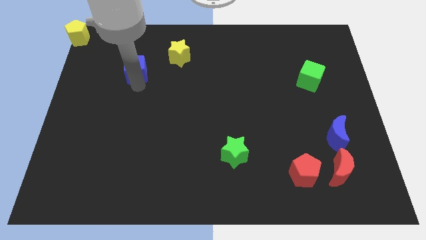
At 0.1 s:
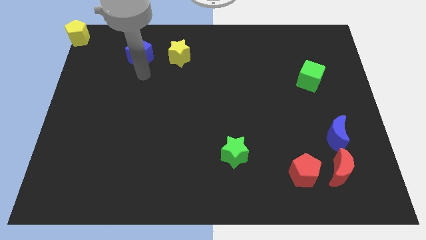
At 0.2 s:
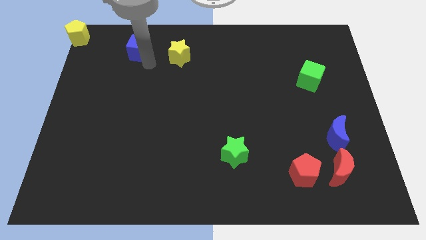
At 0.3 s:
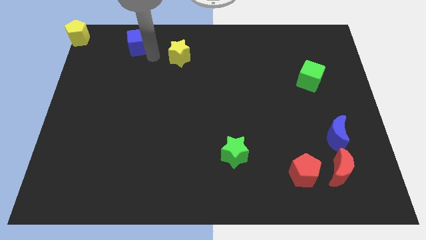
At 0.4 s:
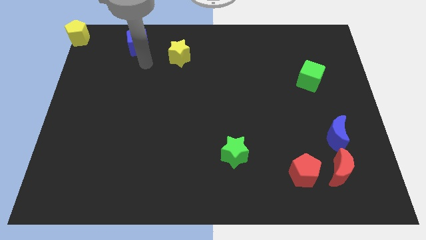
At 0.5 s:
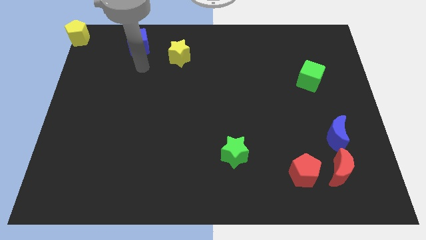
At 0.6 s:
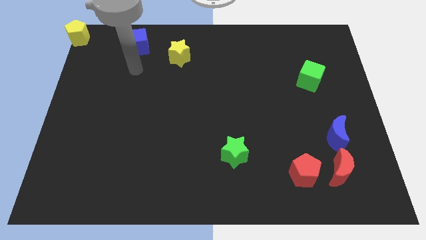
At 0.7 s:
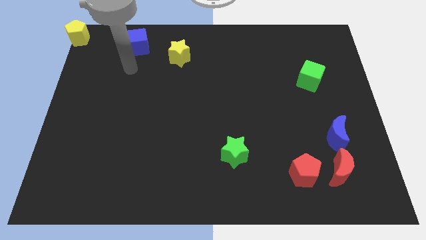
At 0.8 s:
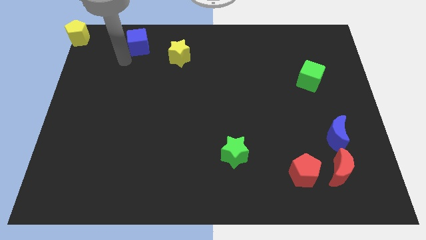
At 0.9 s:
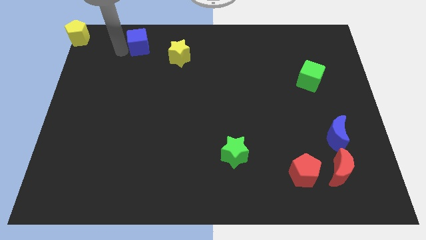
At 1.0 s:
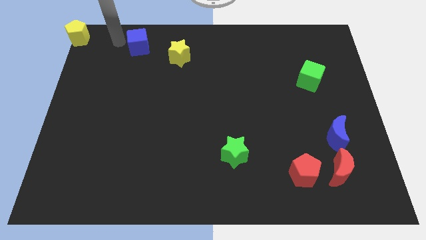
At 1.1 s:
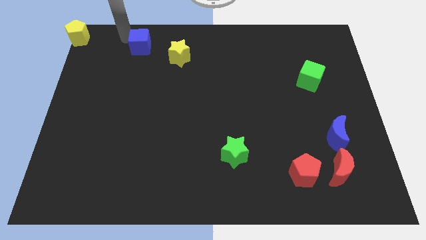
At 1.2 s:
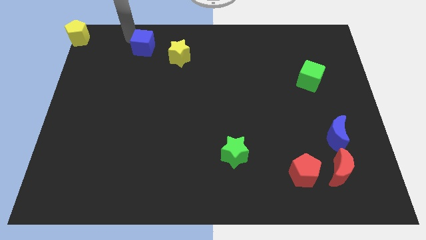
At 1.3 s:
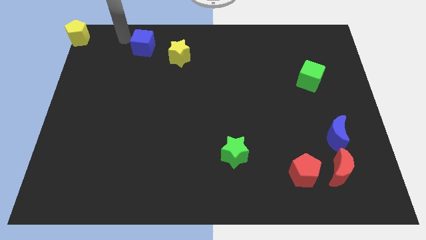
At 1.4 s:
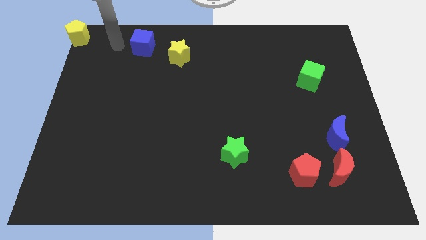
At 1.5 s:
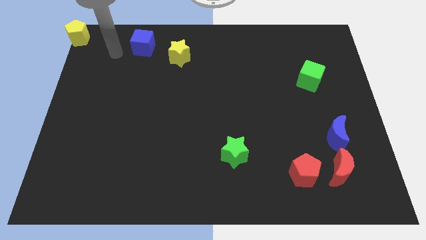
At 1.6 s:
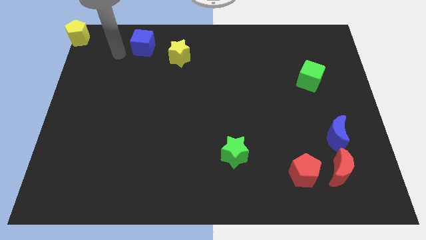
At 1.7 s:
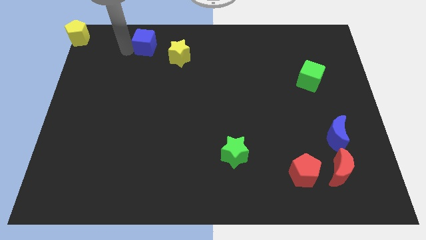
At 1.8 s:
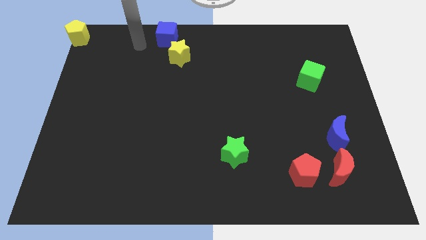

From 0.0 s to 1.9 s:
move blue cube left above the yellow star

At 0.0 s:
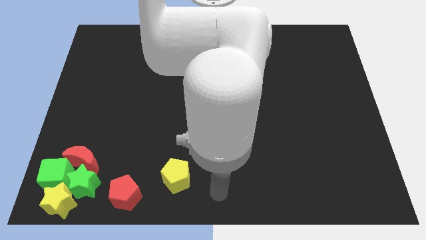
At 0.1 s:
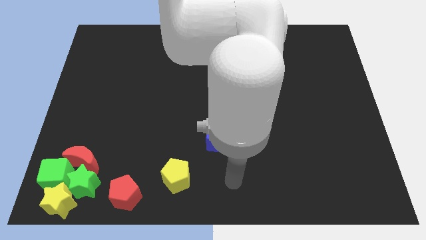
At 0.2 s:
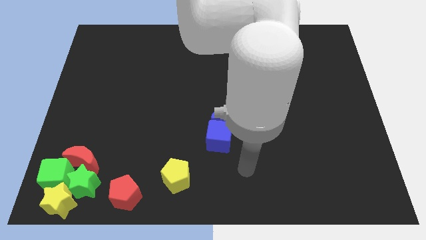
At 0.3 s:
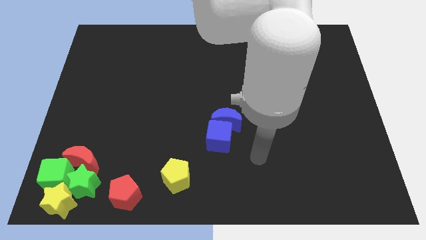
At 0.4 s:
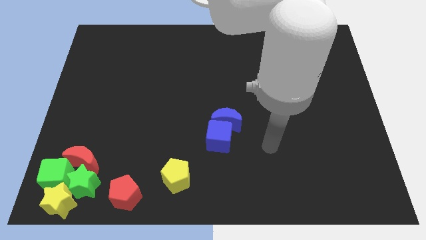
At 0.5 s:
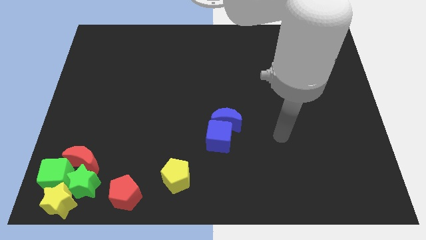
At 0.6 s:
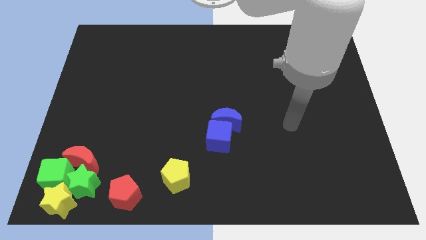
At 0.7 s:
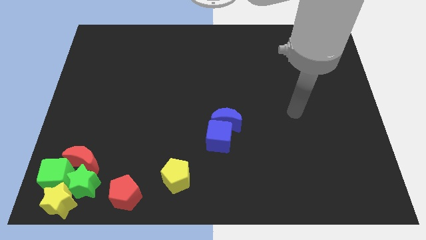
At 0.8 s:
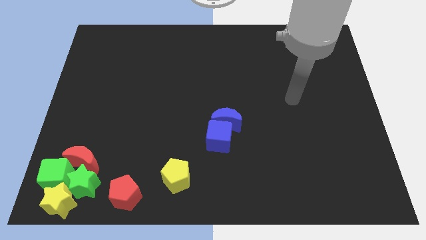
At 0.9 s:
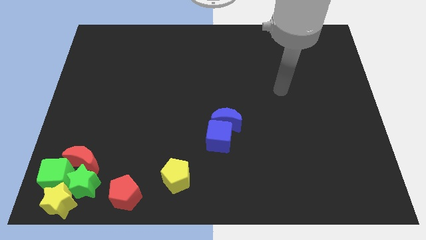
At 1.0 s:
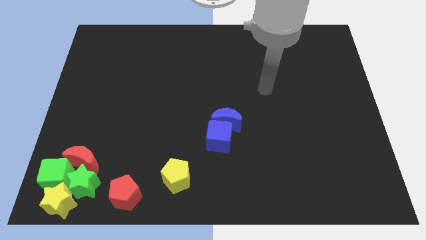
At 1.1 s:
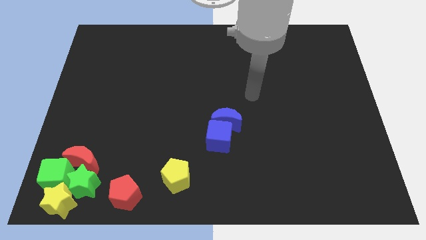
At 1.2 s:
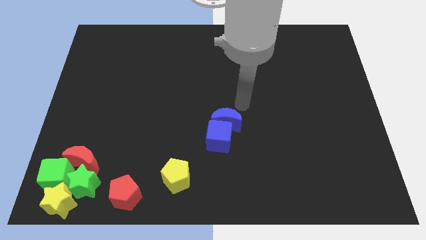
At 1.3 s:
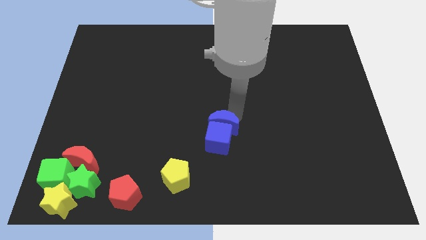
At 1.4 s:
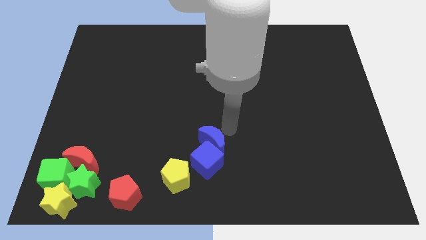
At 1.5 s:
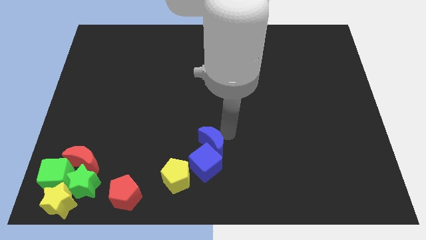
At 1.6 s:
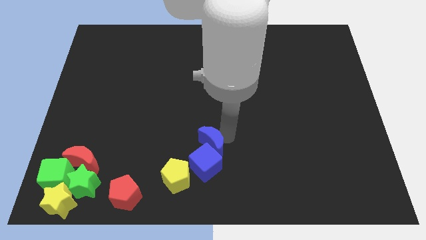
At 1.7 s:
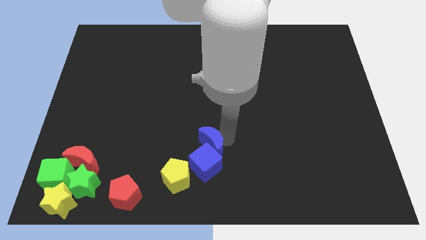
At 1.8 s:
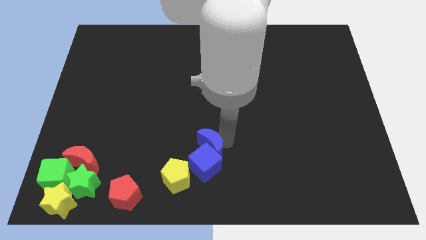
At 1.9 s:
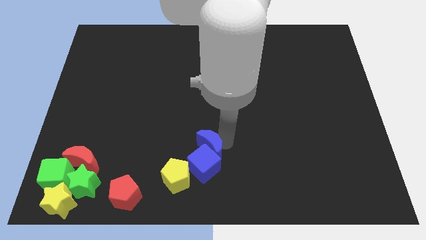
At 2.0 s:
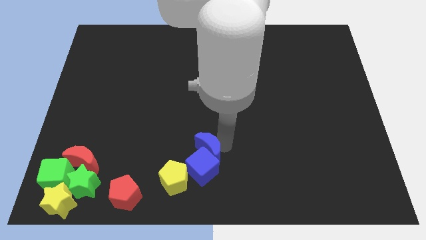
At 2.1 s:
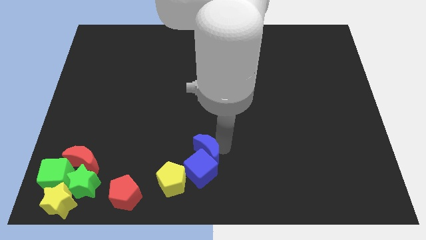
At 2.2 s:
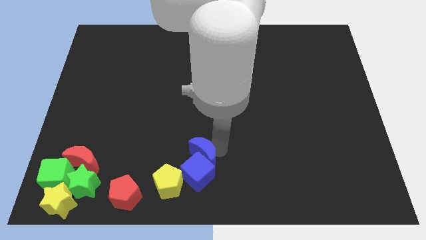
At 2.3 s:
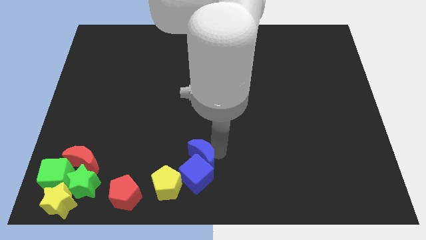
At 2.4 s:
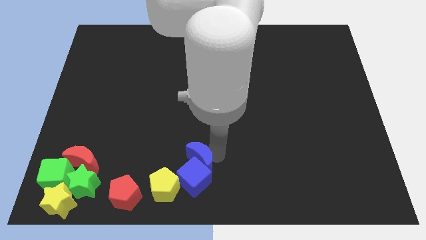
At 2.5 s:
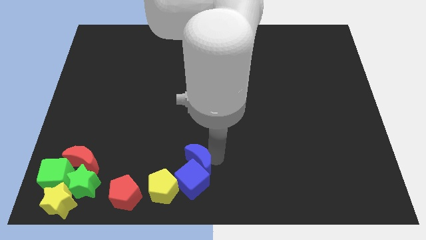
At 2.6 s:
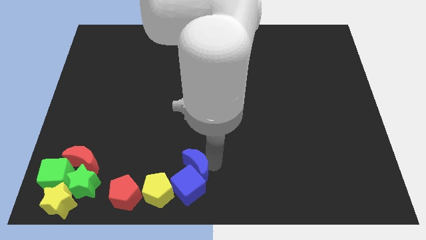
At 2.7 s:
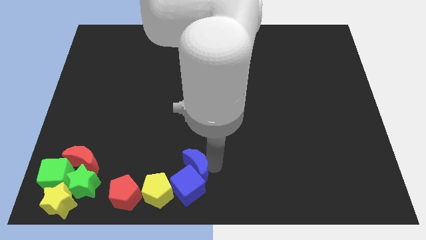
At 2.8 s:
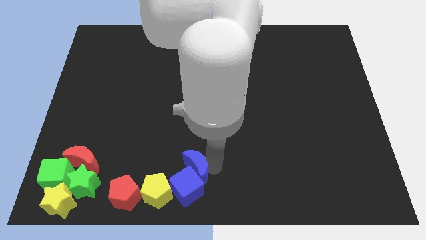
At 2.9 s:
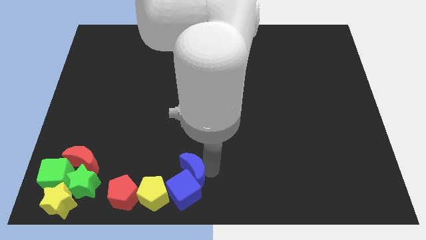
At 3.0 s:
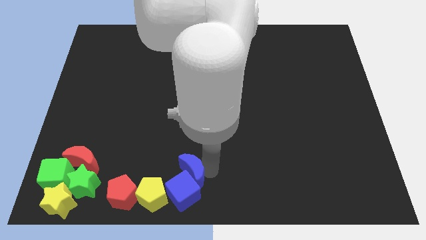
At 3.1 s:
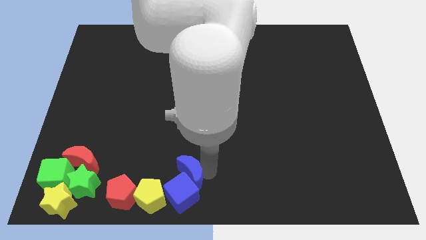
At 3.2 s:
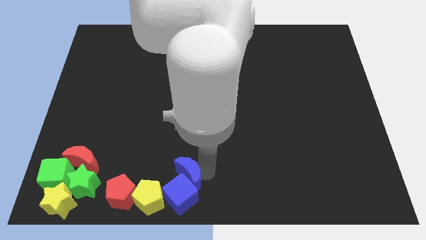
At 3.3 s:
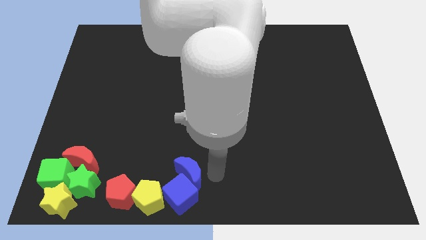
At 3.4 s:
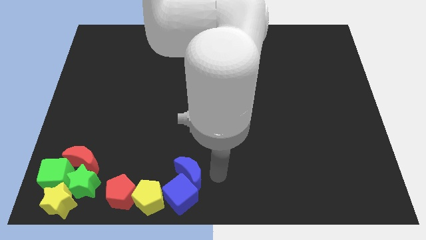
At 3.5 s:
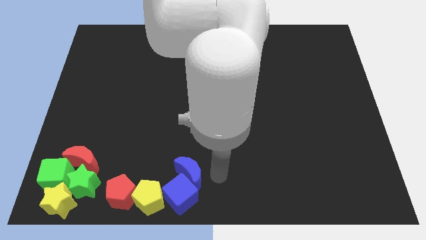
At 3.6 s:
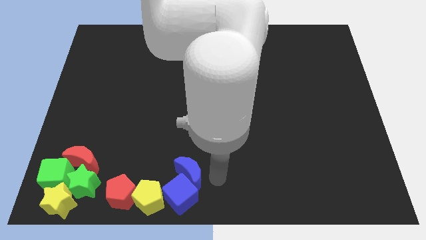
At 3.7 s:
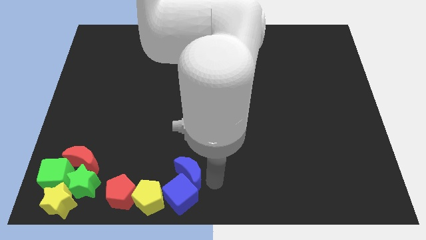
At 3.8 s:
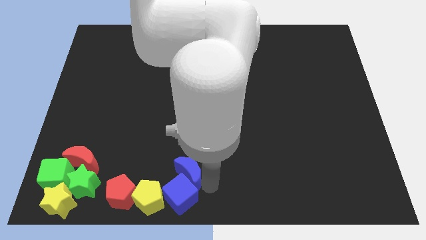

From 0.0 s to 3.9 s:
push the blue blocks towards the bottom of the board

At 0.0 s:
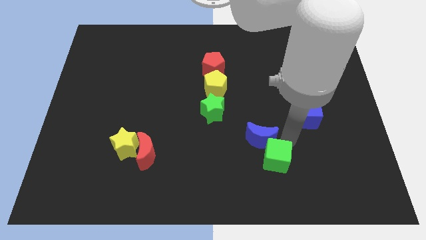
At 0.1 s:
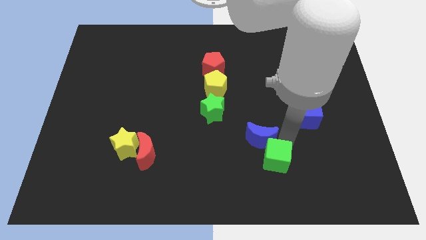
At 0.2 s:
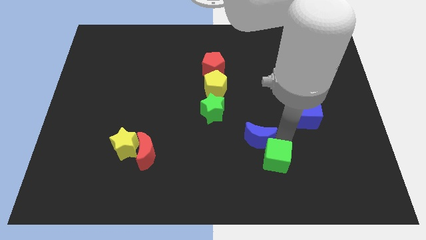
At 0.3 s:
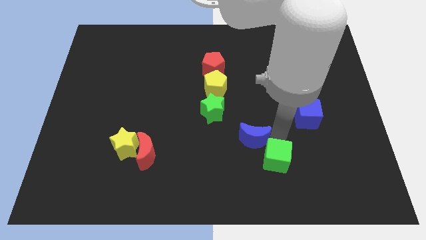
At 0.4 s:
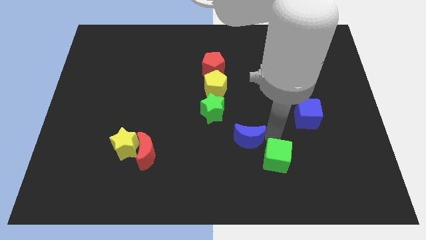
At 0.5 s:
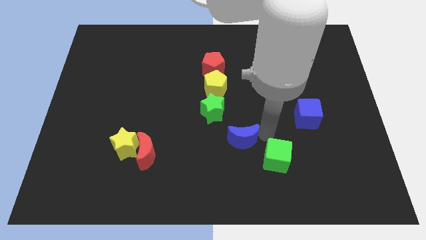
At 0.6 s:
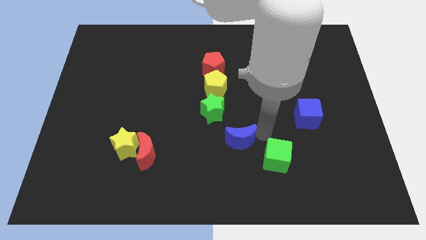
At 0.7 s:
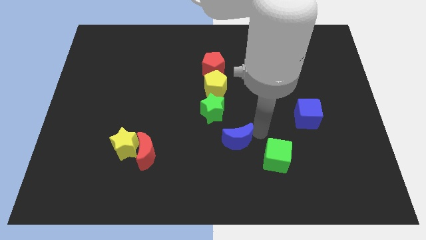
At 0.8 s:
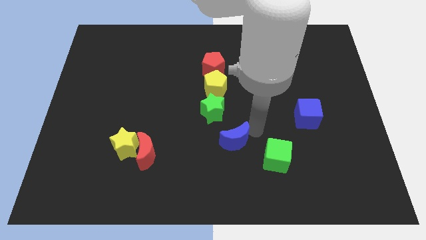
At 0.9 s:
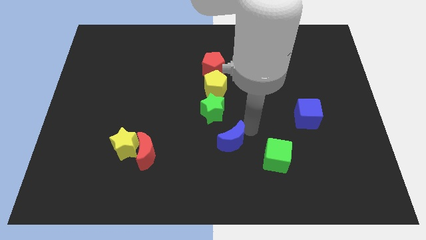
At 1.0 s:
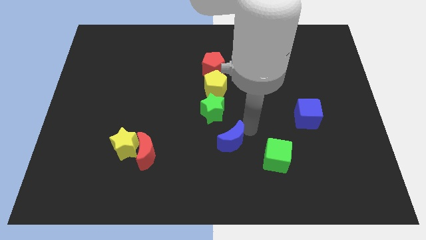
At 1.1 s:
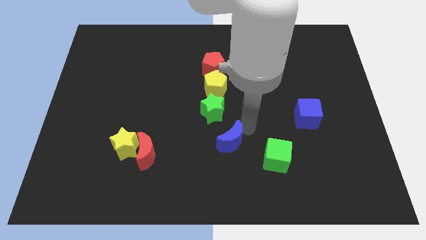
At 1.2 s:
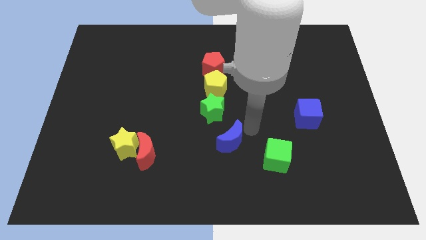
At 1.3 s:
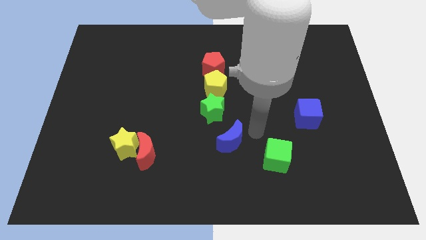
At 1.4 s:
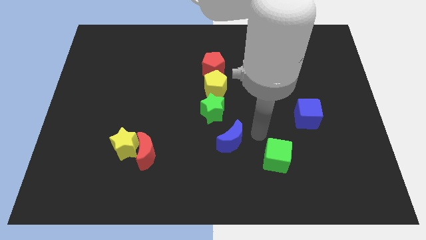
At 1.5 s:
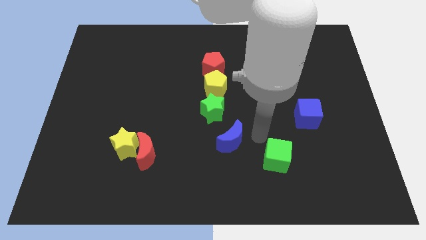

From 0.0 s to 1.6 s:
separate blue crescent from the green cube

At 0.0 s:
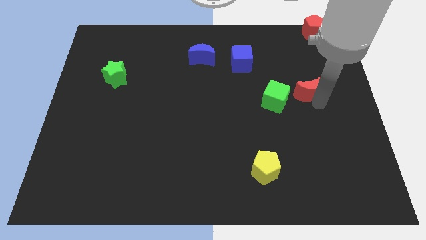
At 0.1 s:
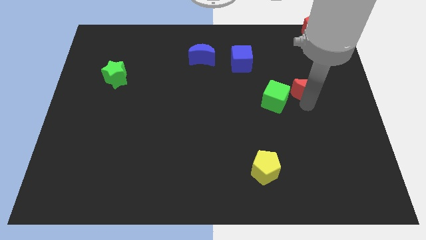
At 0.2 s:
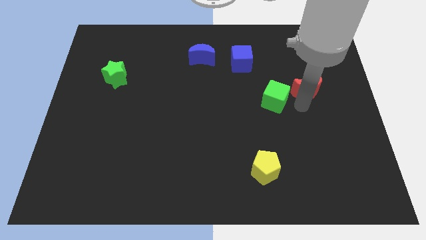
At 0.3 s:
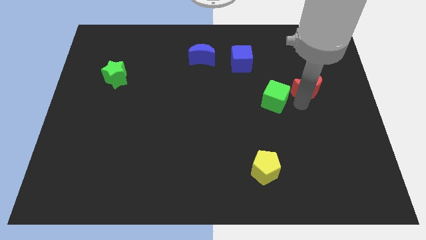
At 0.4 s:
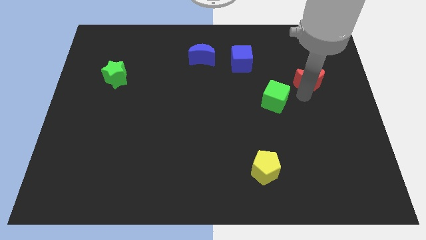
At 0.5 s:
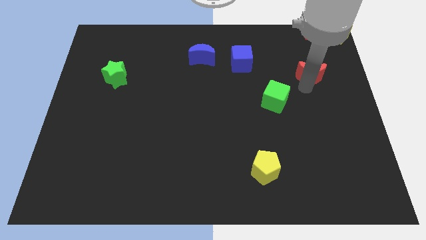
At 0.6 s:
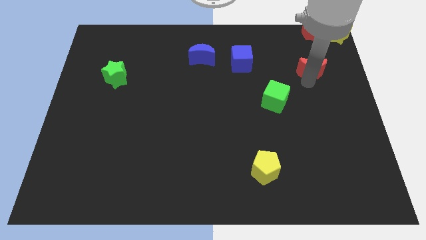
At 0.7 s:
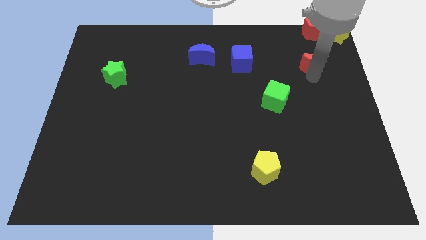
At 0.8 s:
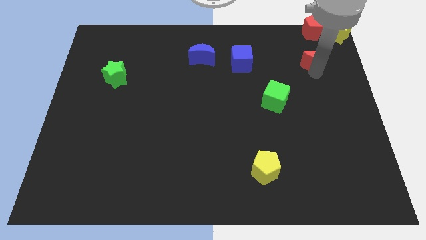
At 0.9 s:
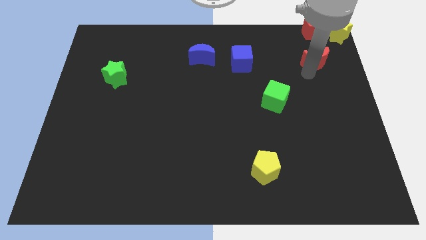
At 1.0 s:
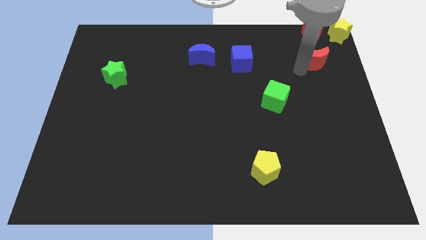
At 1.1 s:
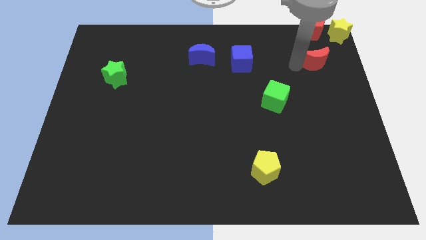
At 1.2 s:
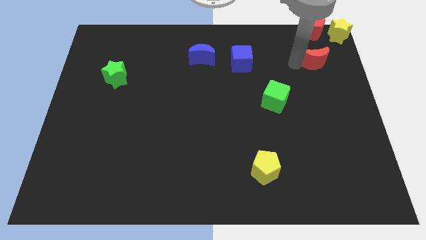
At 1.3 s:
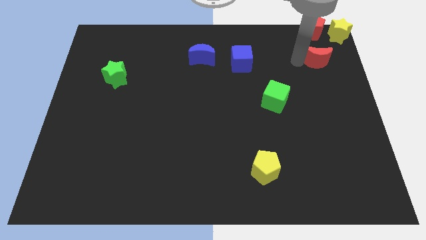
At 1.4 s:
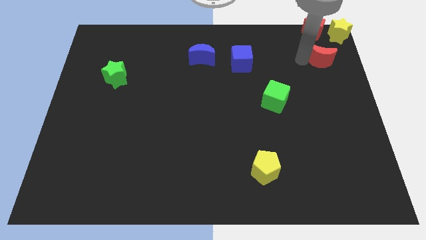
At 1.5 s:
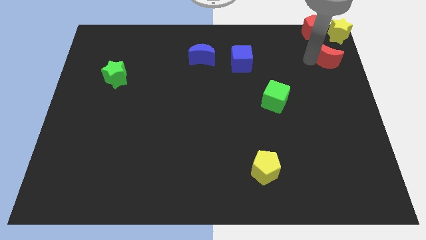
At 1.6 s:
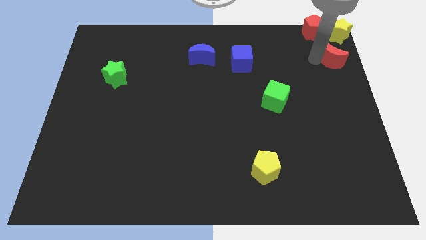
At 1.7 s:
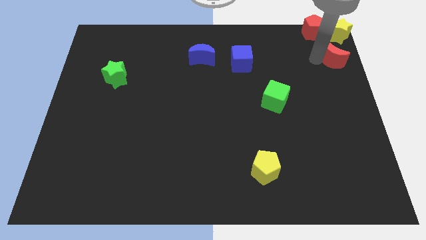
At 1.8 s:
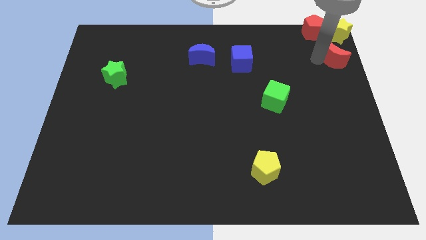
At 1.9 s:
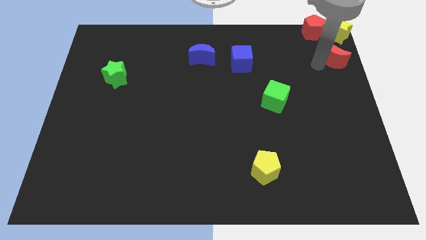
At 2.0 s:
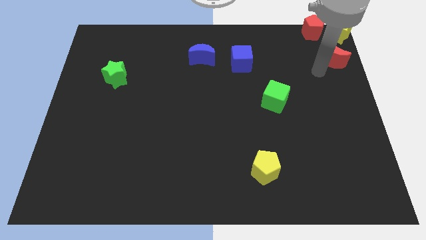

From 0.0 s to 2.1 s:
separate red moon from green cube
